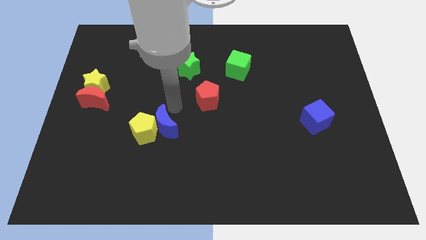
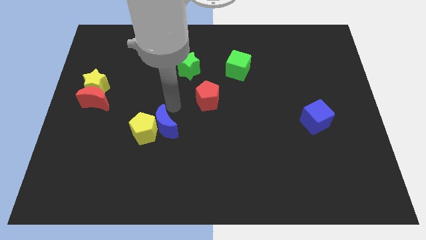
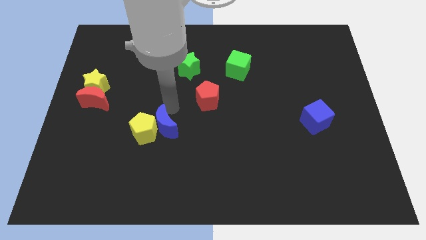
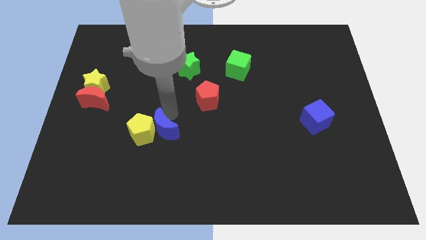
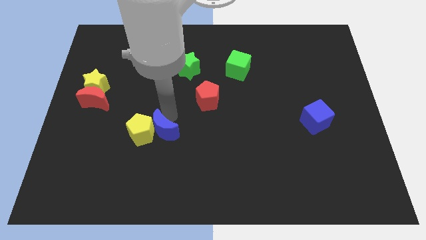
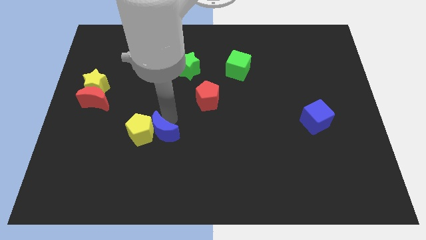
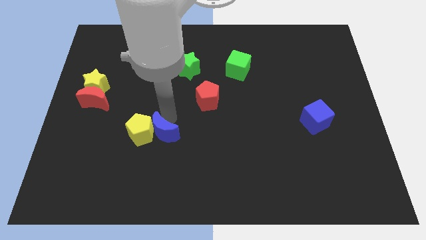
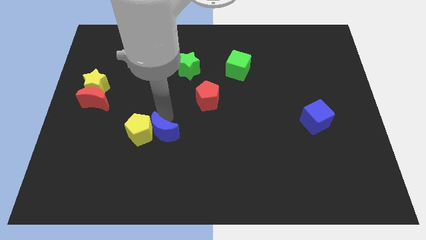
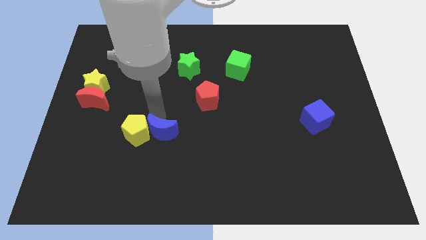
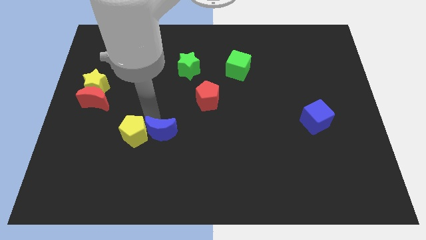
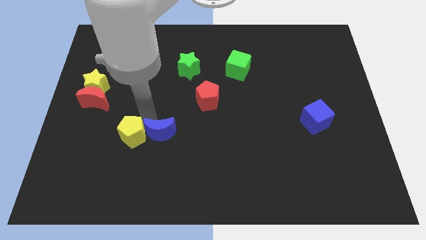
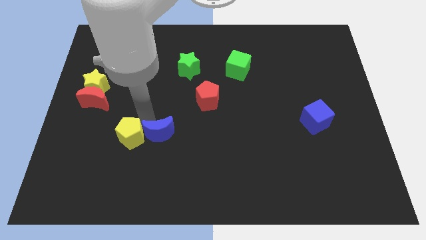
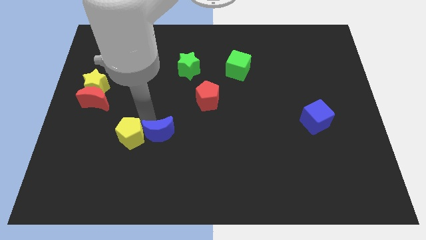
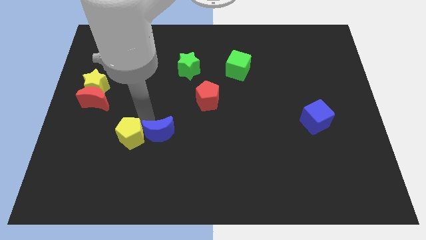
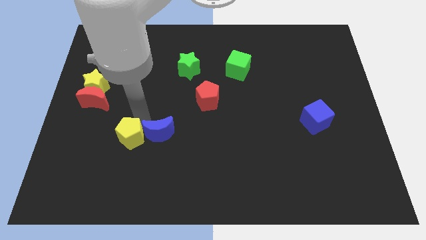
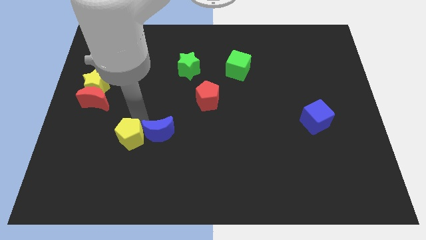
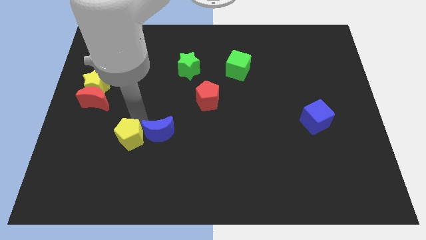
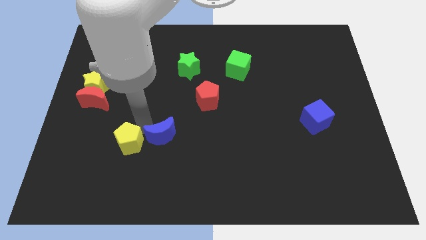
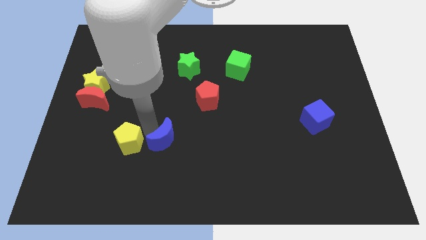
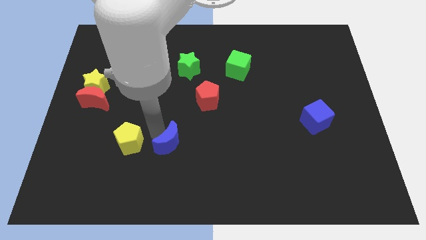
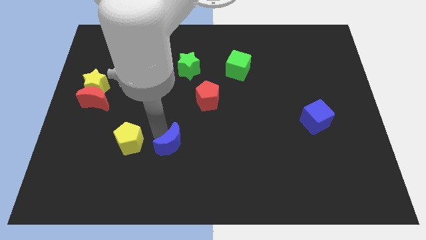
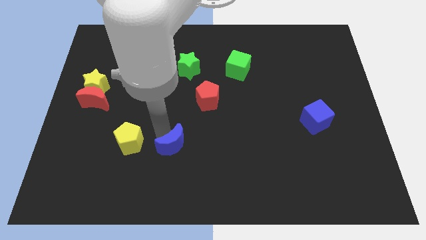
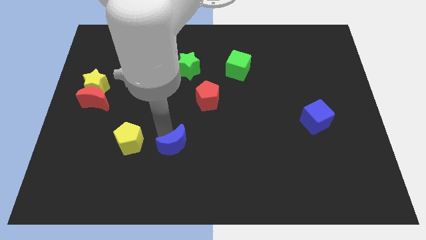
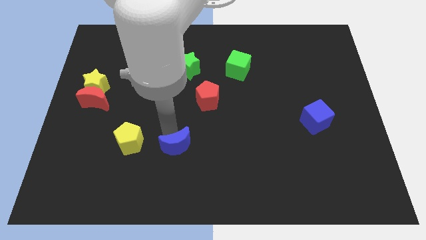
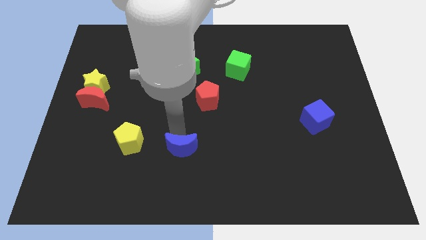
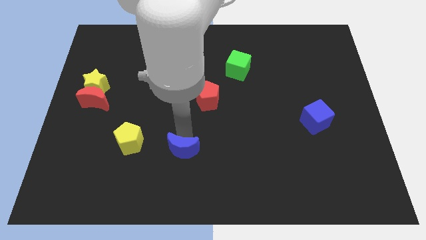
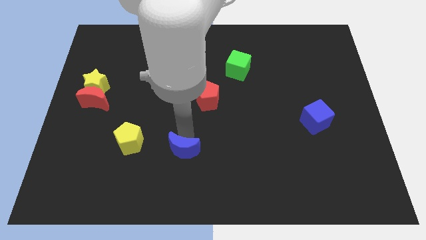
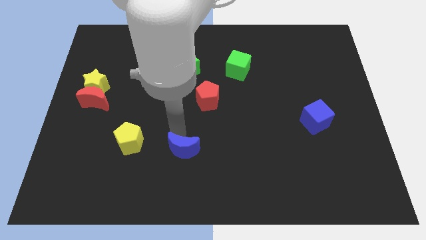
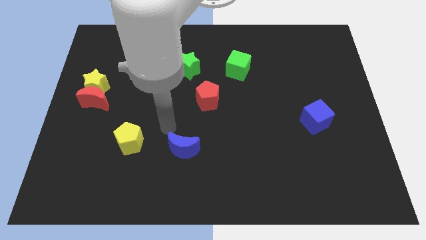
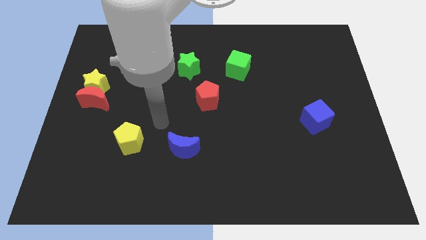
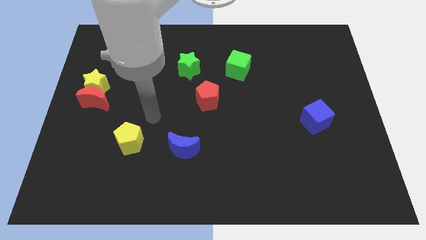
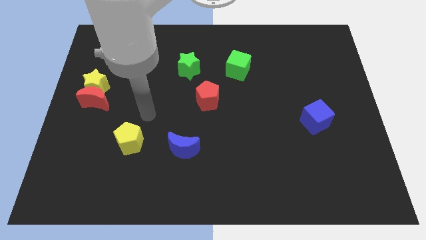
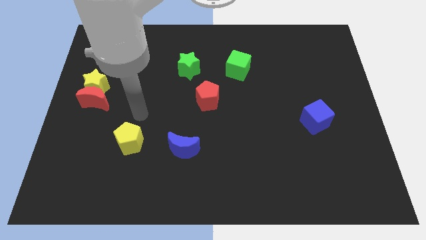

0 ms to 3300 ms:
put the blue crescent to the right of the yellow pentagon

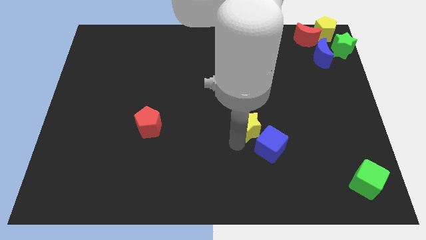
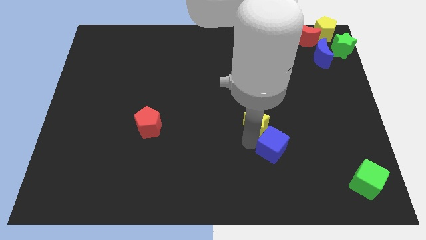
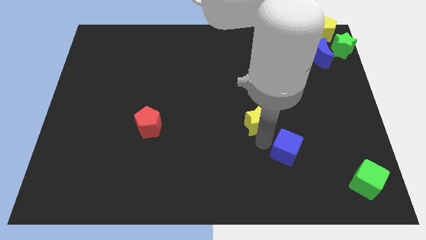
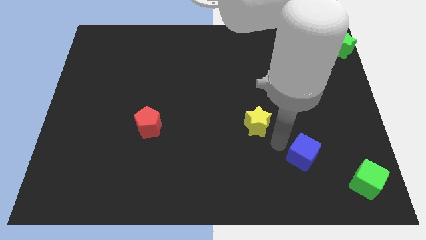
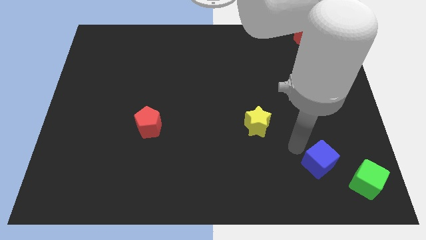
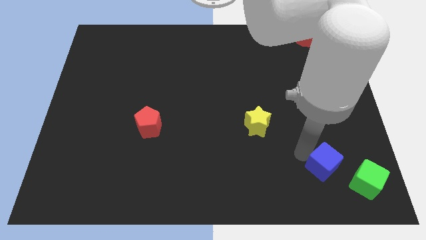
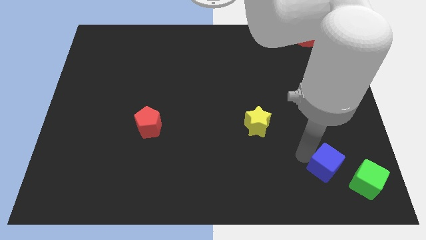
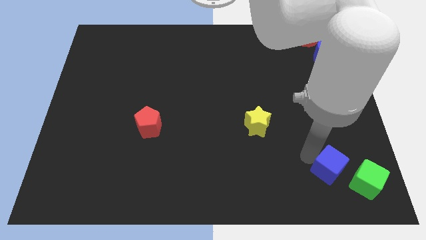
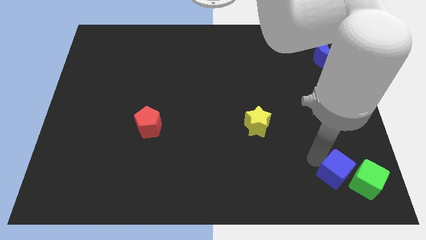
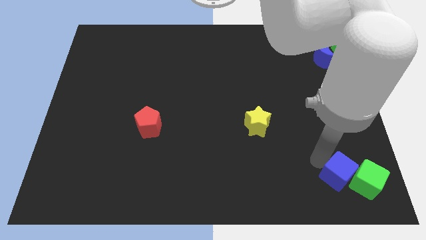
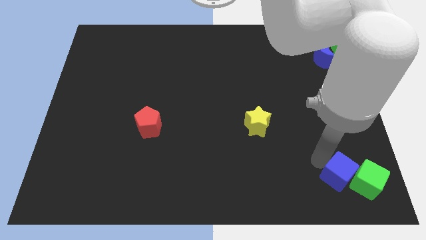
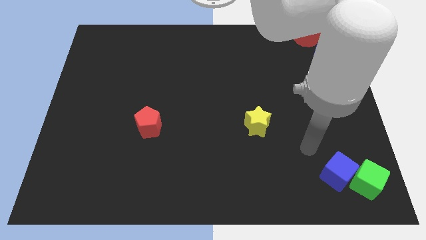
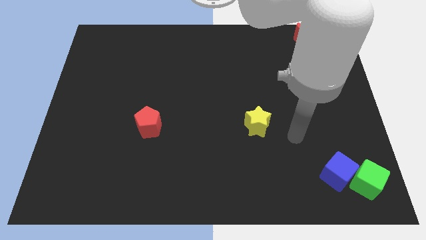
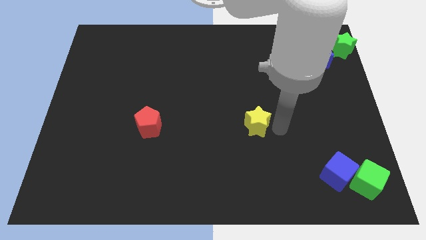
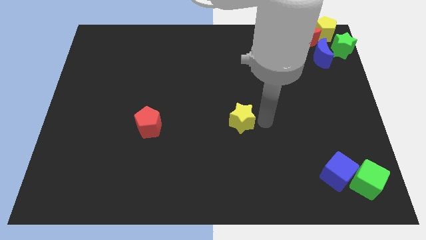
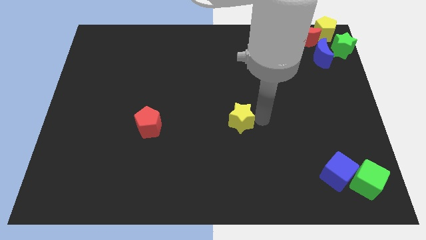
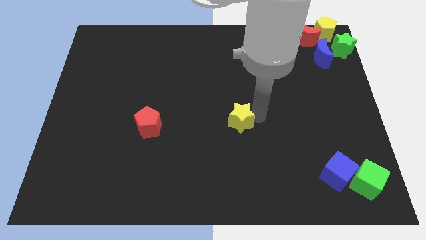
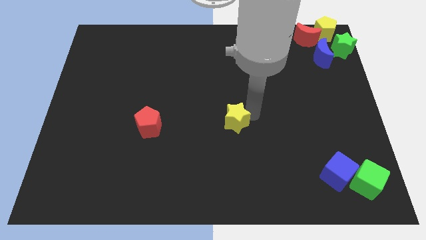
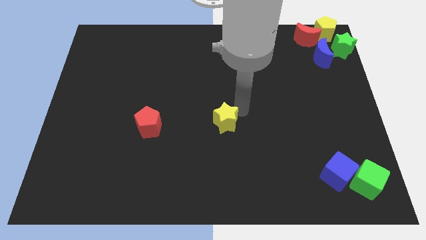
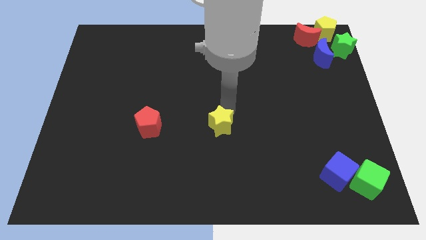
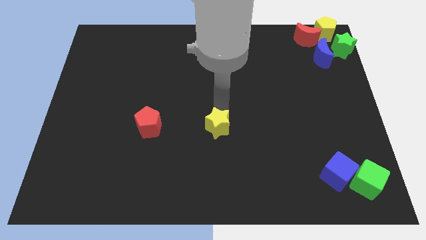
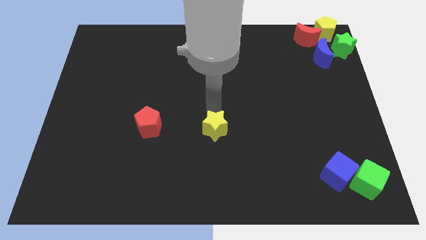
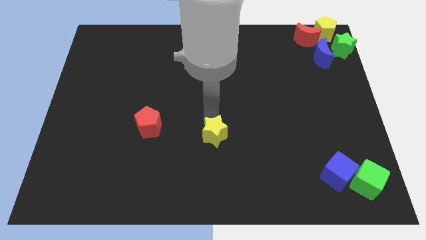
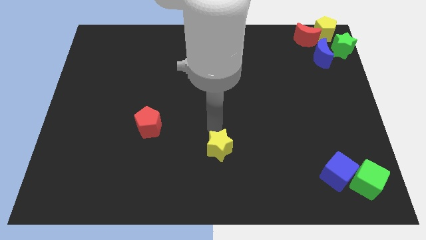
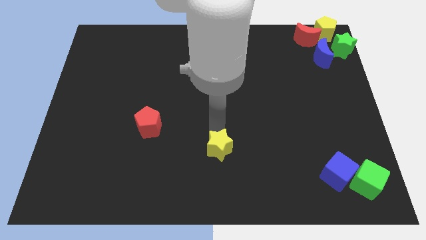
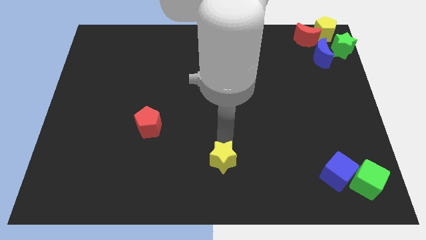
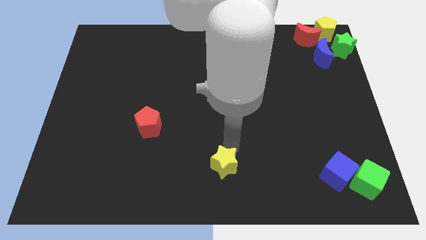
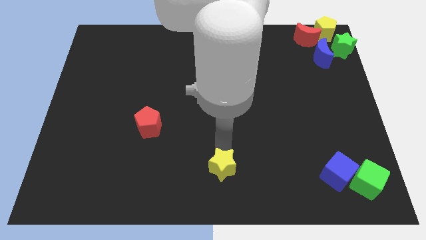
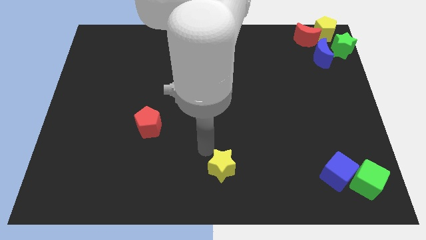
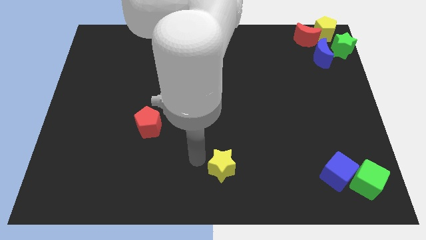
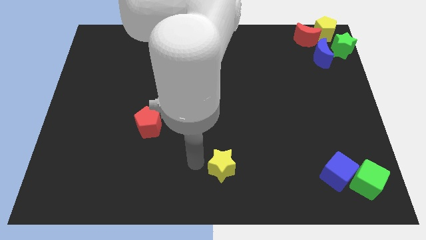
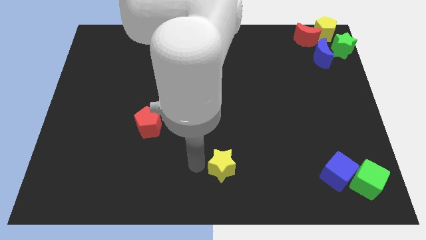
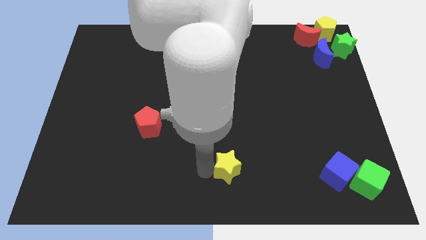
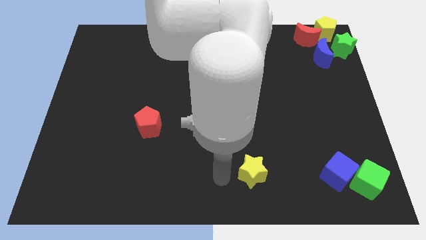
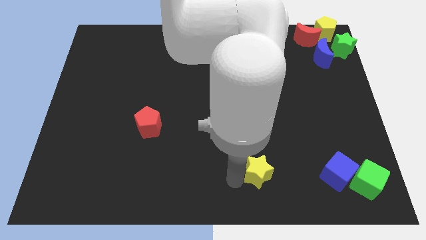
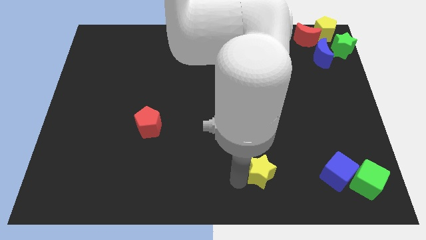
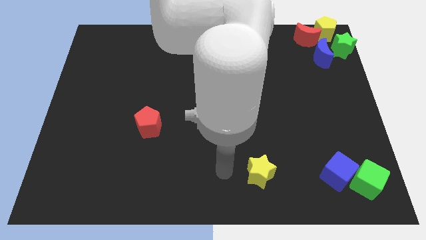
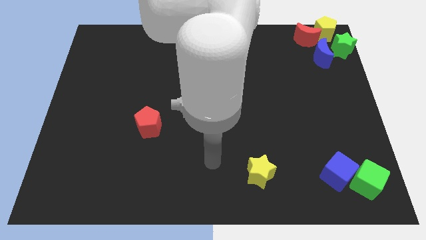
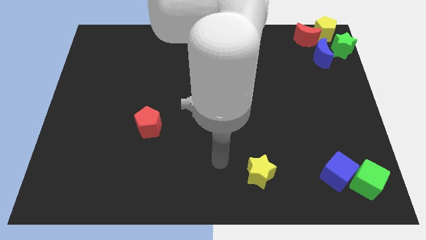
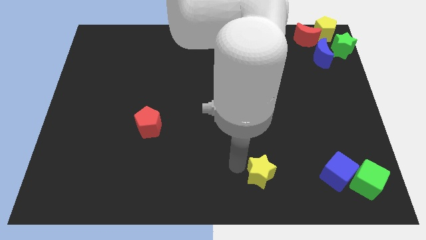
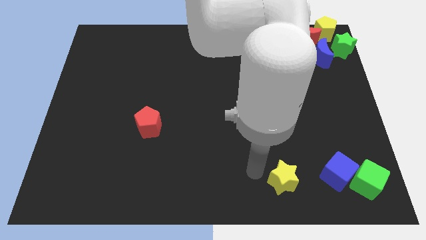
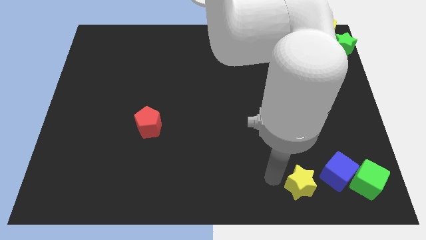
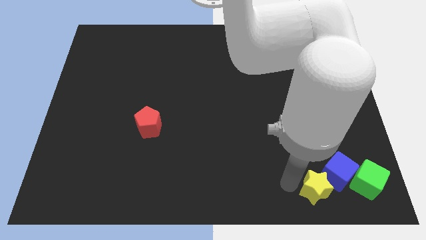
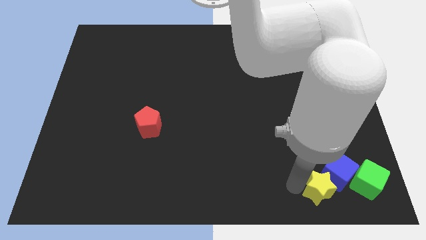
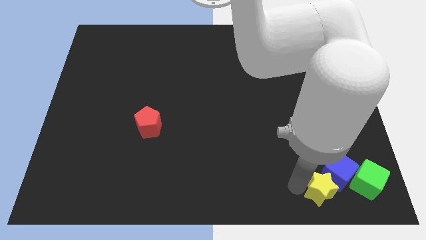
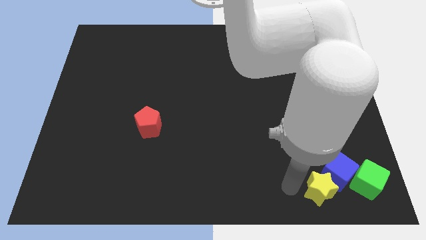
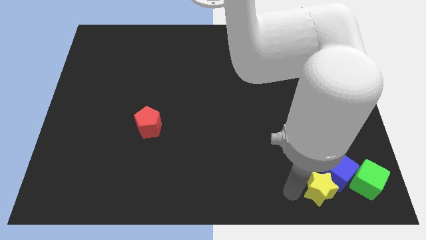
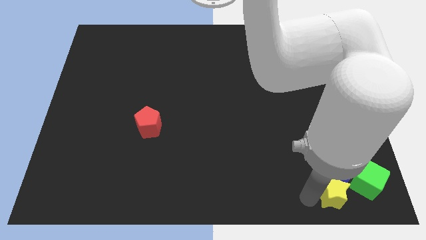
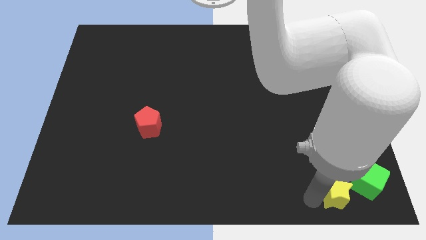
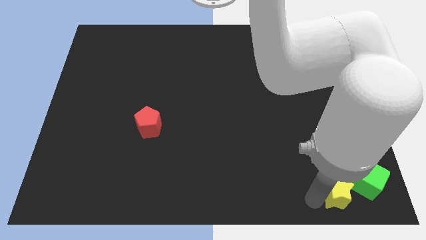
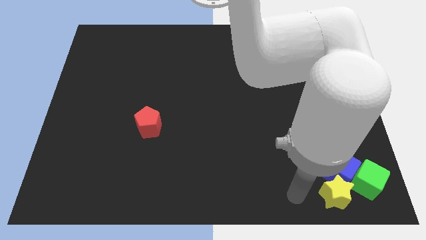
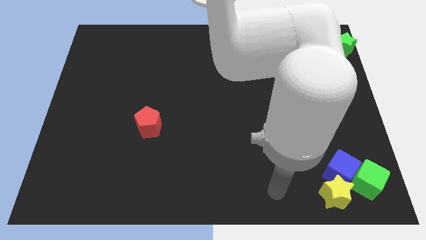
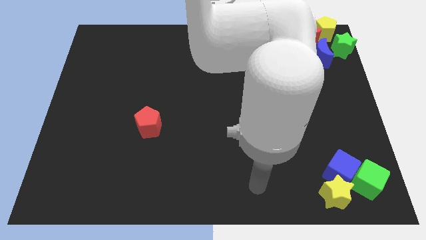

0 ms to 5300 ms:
place the blue cube and yellow star beside green cube

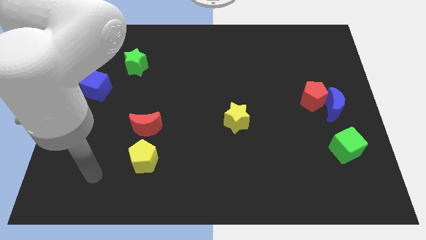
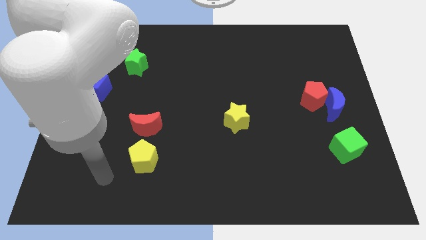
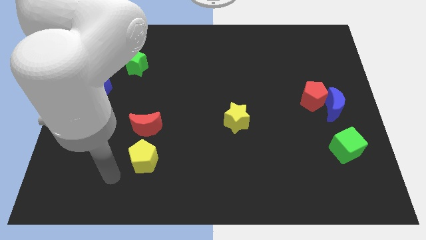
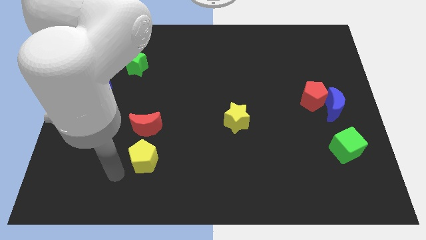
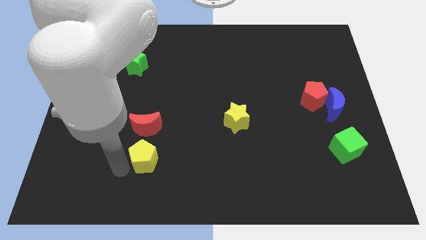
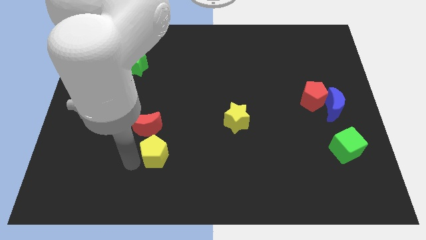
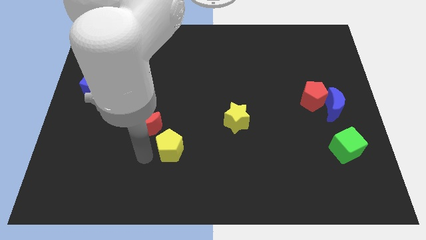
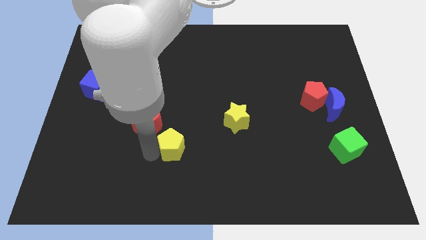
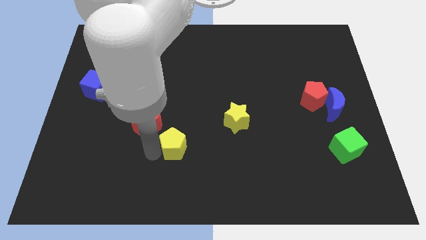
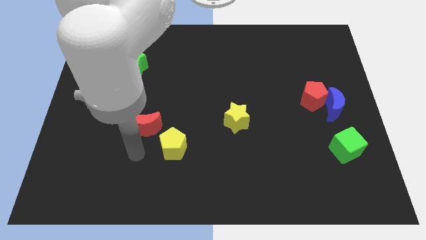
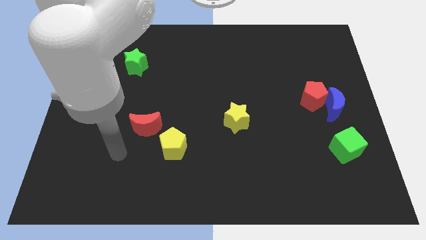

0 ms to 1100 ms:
slide the yellow pentagon towards the yellow star
